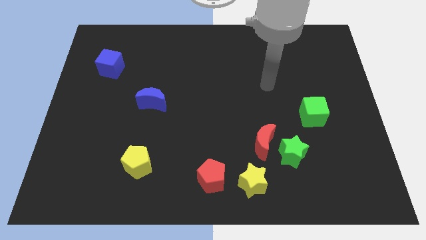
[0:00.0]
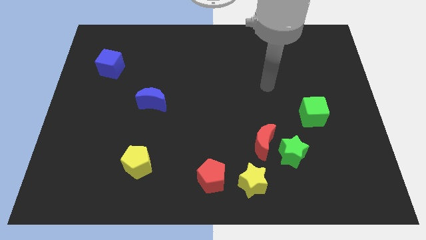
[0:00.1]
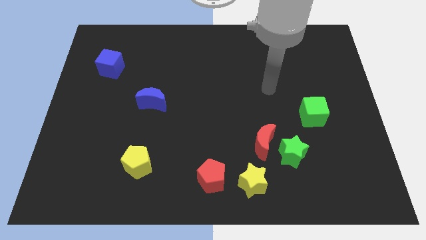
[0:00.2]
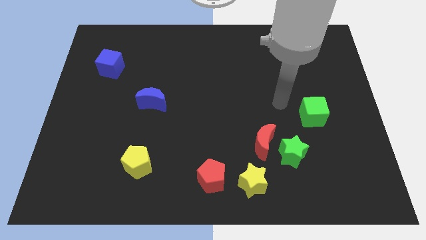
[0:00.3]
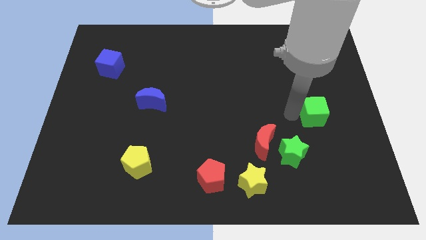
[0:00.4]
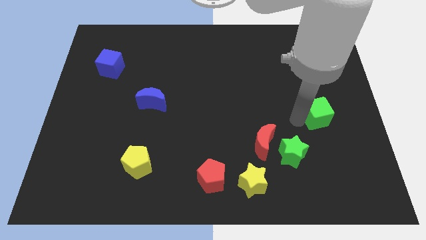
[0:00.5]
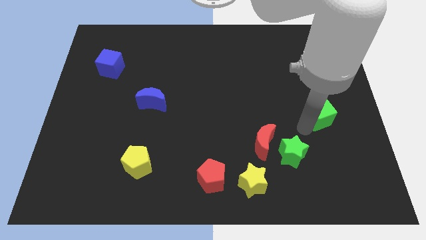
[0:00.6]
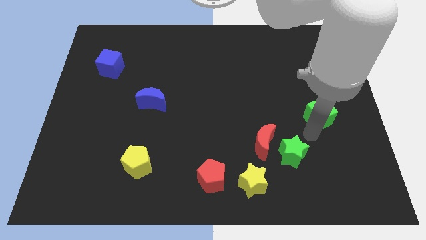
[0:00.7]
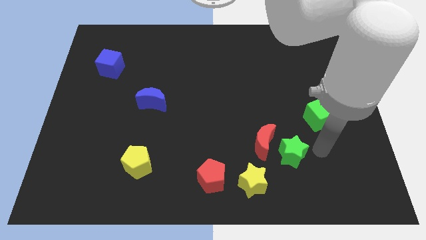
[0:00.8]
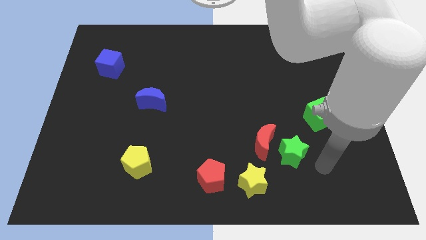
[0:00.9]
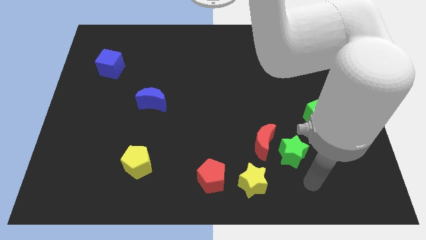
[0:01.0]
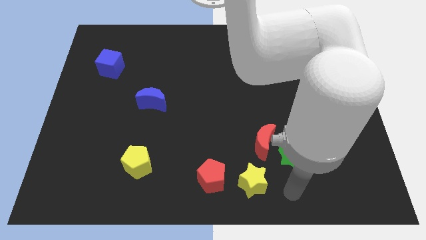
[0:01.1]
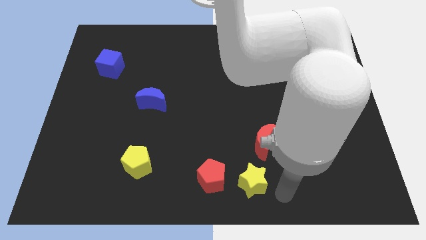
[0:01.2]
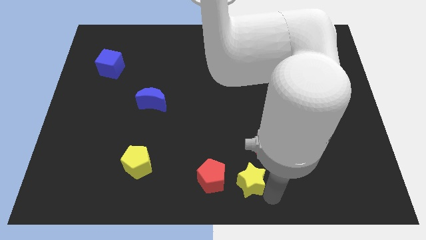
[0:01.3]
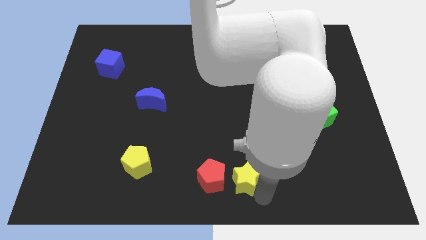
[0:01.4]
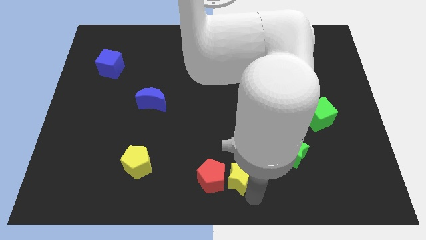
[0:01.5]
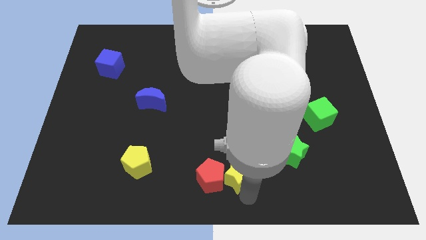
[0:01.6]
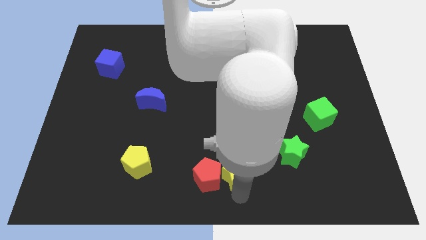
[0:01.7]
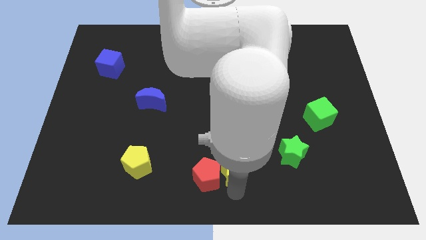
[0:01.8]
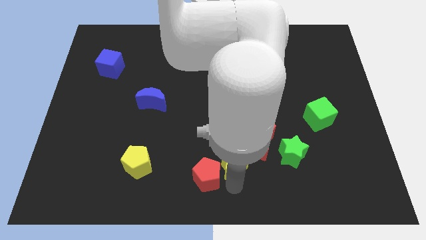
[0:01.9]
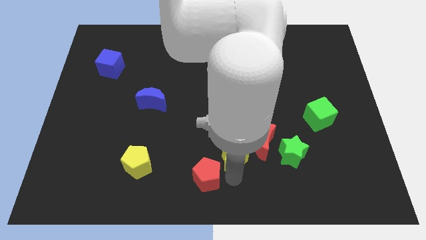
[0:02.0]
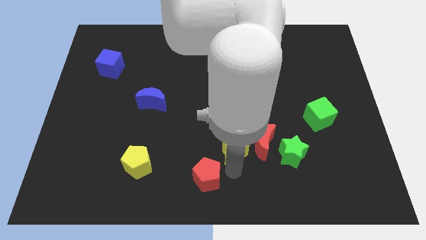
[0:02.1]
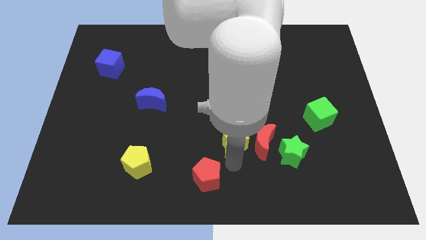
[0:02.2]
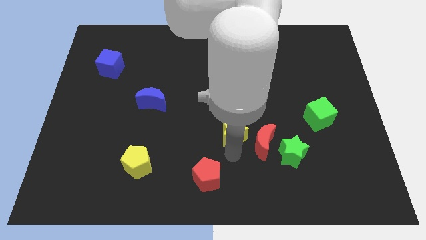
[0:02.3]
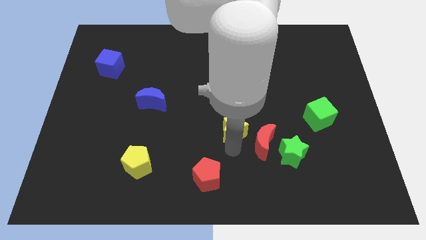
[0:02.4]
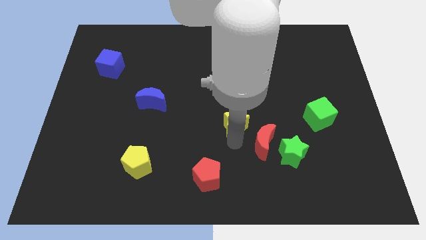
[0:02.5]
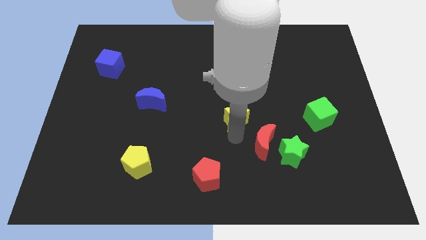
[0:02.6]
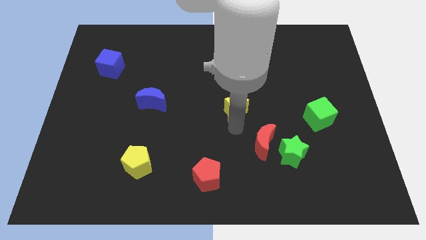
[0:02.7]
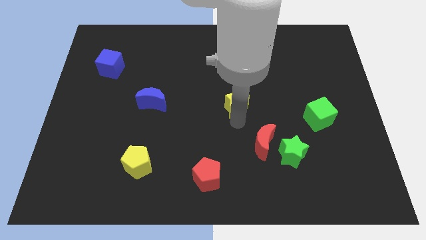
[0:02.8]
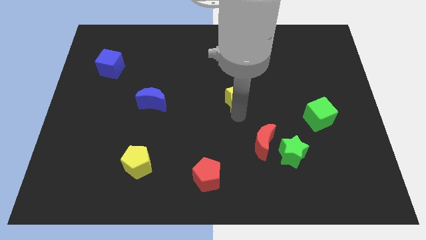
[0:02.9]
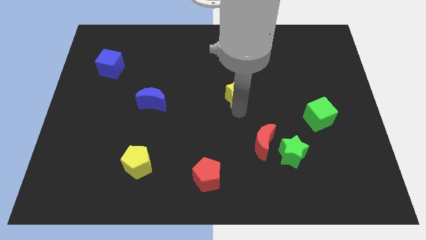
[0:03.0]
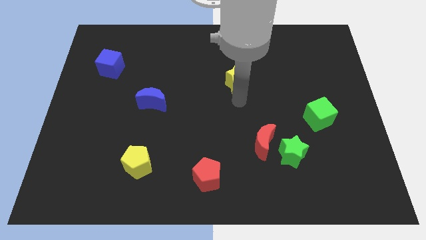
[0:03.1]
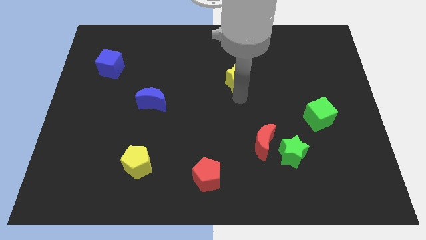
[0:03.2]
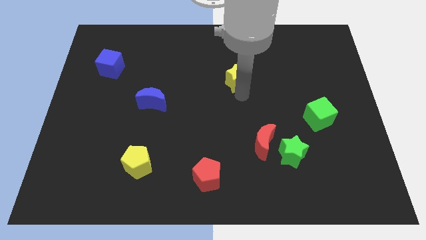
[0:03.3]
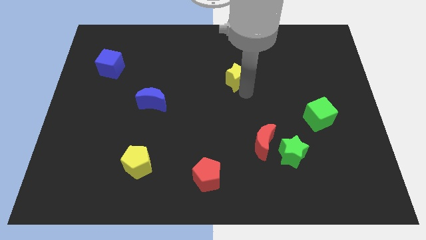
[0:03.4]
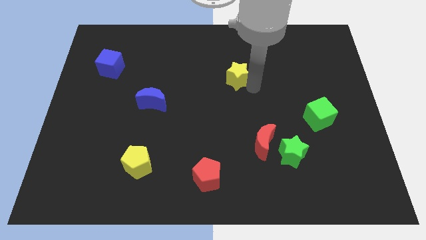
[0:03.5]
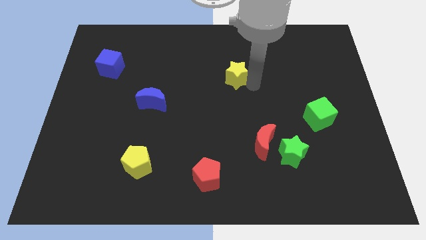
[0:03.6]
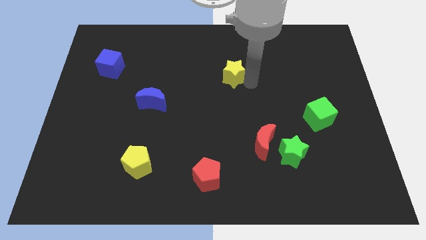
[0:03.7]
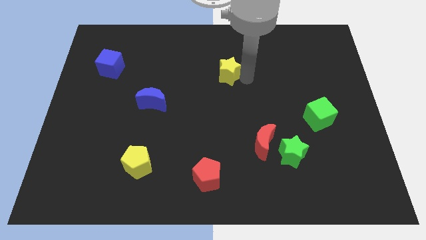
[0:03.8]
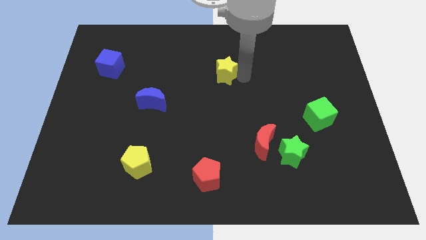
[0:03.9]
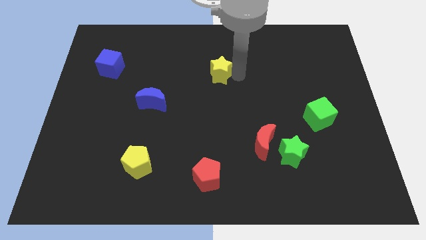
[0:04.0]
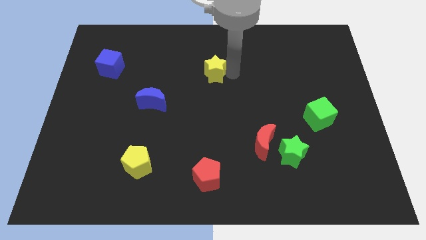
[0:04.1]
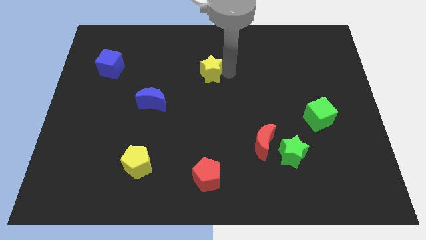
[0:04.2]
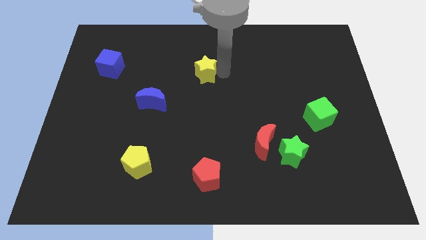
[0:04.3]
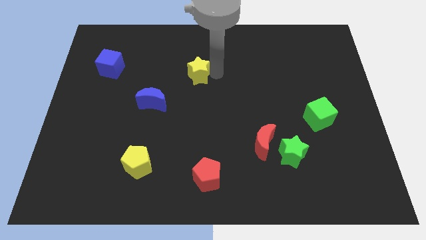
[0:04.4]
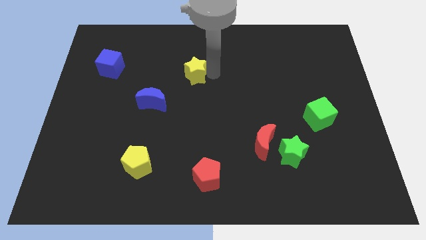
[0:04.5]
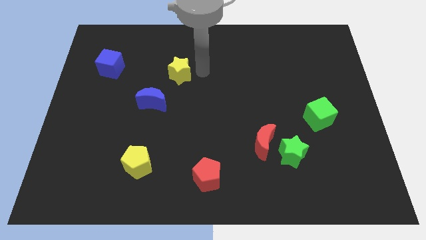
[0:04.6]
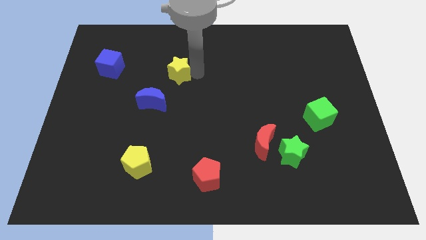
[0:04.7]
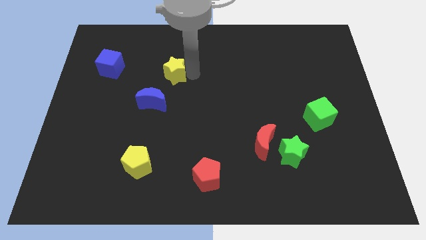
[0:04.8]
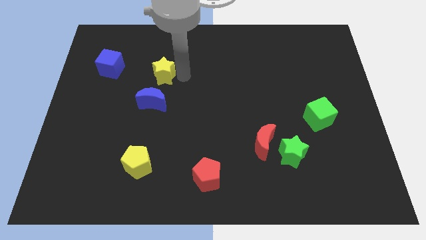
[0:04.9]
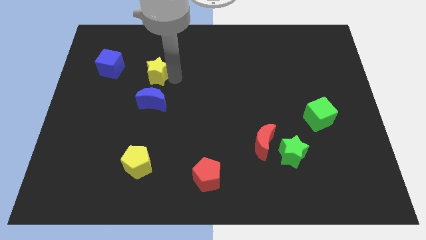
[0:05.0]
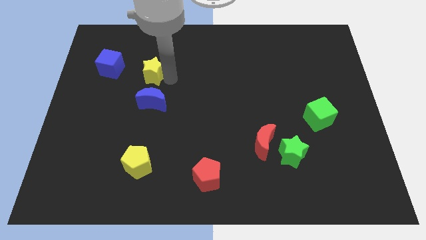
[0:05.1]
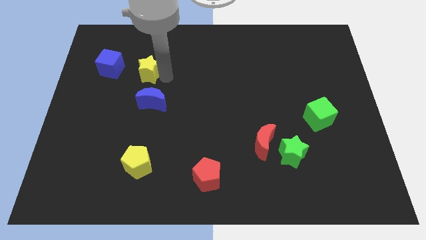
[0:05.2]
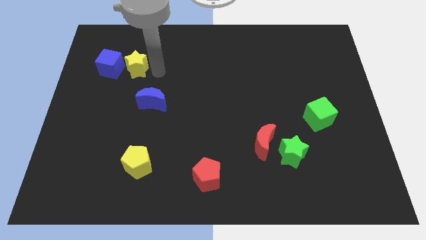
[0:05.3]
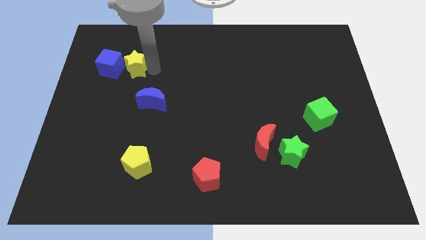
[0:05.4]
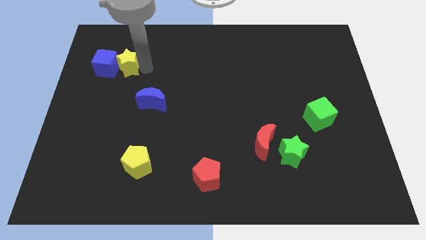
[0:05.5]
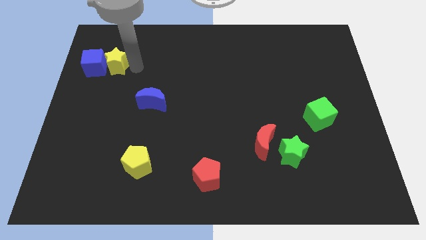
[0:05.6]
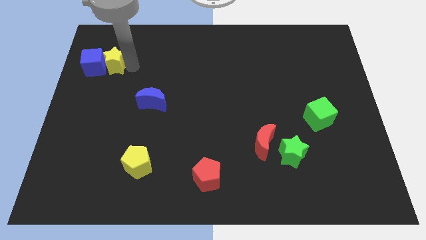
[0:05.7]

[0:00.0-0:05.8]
put the yellow star to the blue cube

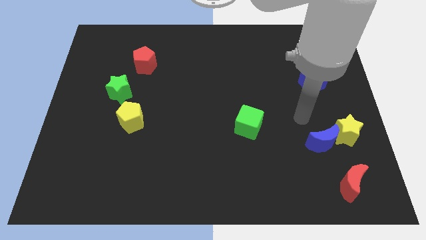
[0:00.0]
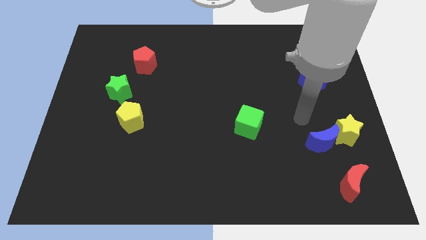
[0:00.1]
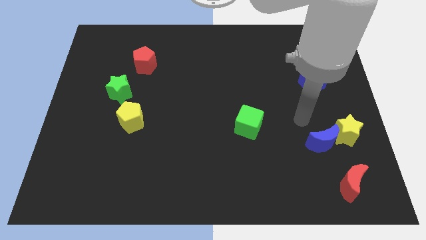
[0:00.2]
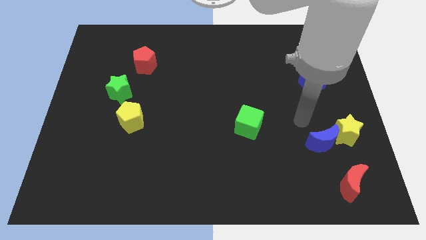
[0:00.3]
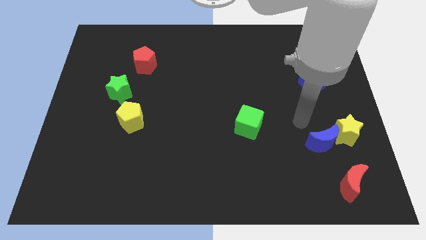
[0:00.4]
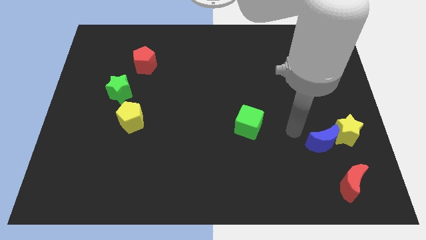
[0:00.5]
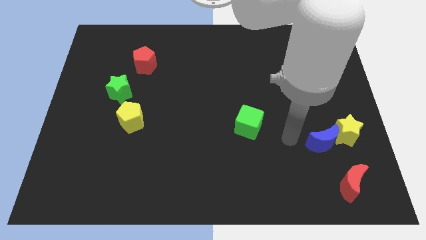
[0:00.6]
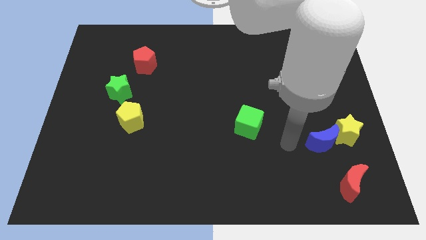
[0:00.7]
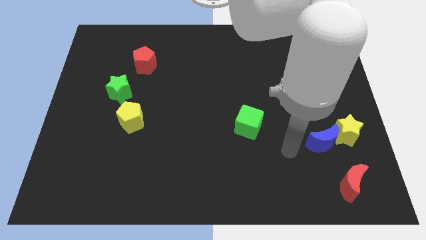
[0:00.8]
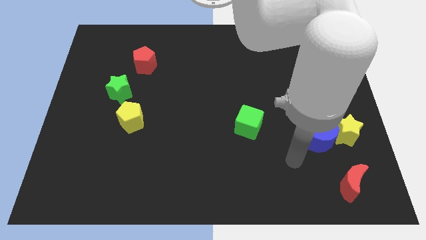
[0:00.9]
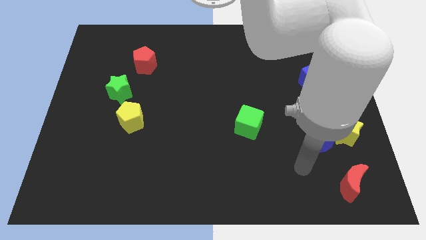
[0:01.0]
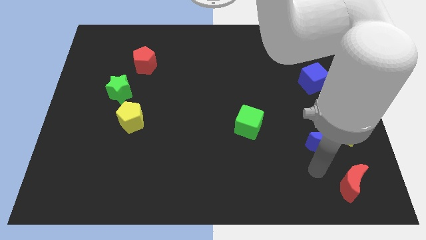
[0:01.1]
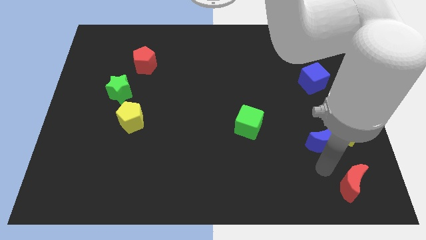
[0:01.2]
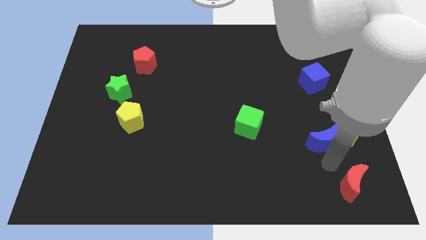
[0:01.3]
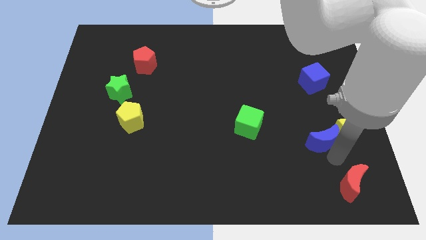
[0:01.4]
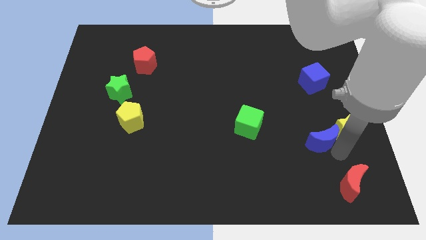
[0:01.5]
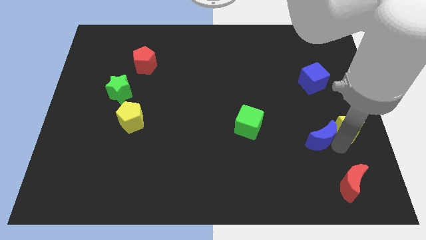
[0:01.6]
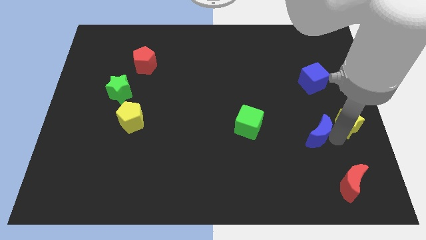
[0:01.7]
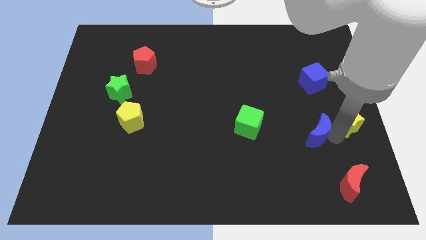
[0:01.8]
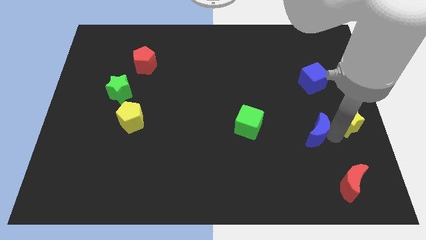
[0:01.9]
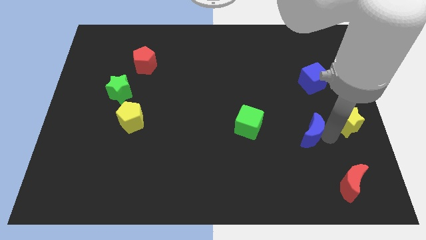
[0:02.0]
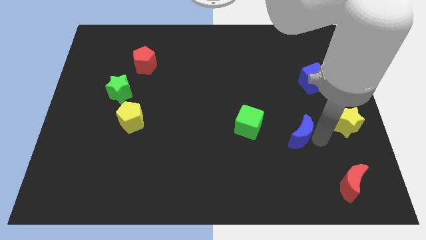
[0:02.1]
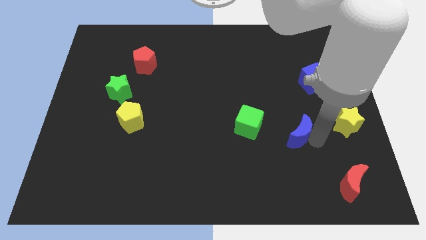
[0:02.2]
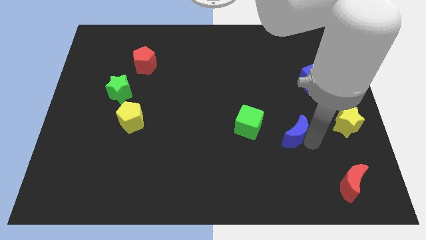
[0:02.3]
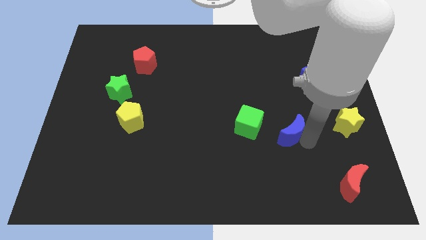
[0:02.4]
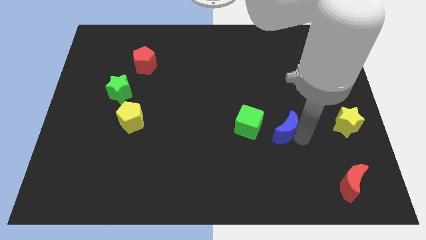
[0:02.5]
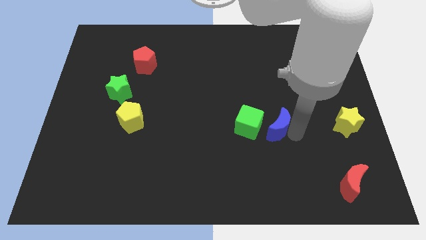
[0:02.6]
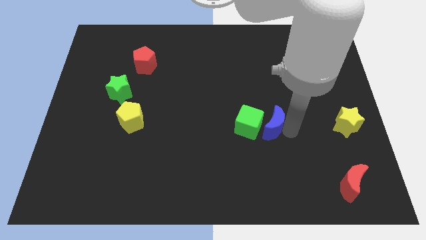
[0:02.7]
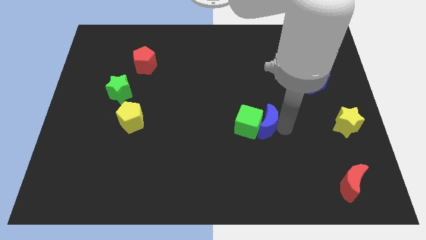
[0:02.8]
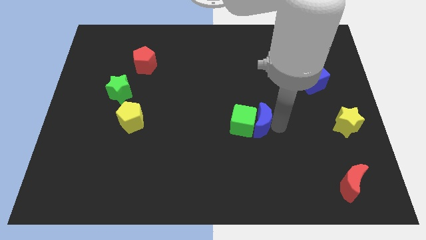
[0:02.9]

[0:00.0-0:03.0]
move the blue moon to the green cube
